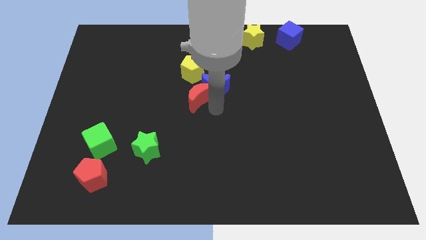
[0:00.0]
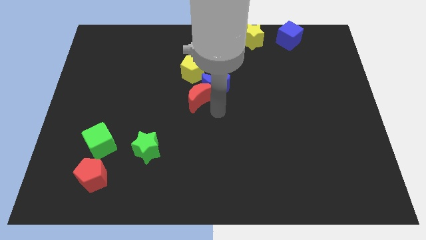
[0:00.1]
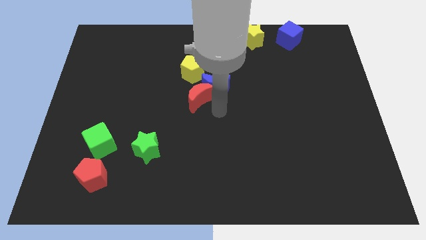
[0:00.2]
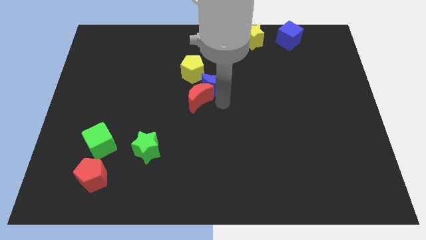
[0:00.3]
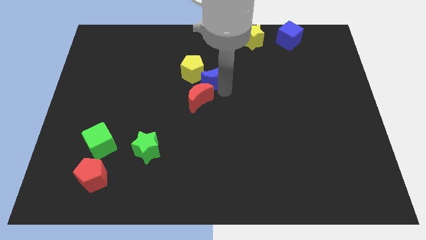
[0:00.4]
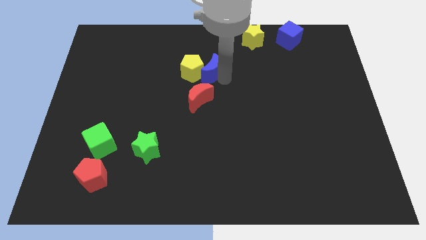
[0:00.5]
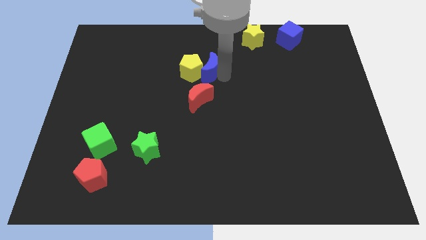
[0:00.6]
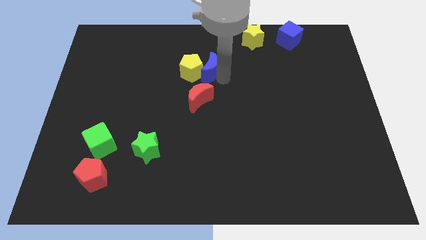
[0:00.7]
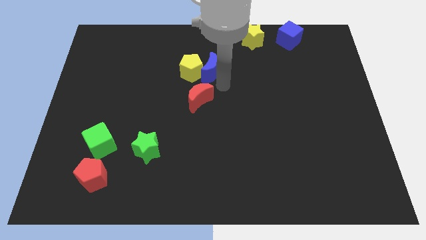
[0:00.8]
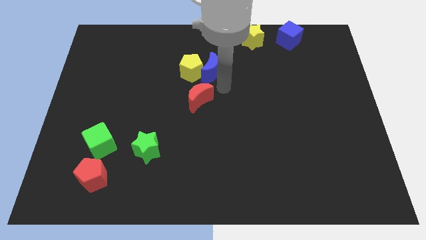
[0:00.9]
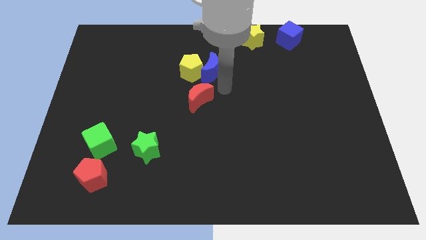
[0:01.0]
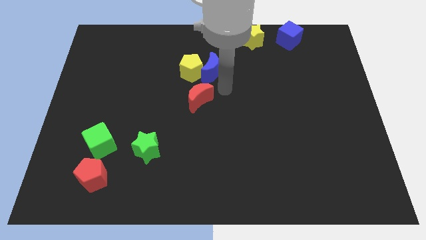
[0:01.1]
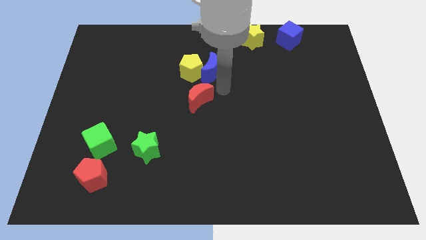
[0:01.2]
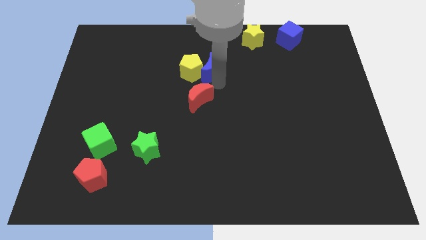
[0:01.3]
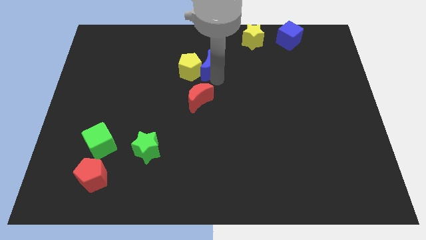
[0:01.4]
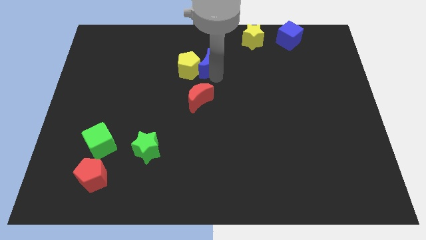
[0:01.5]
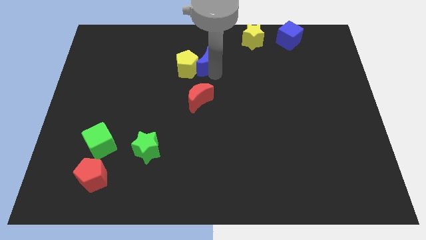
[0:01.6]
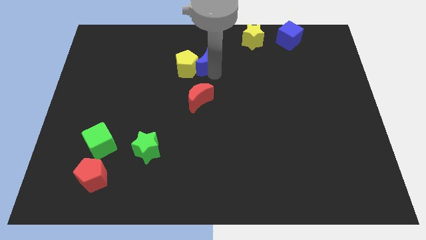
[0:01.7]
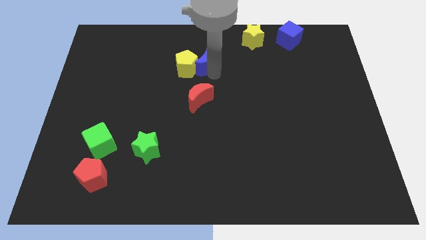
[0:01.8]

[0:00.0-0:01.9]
move the blue moon close to yellow pentagon

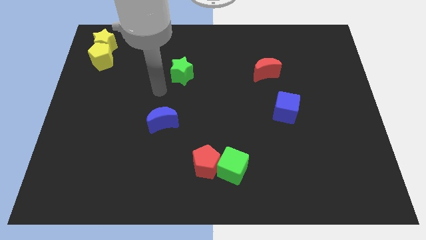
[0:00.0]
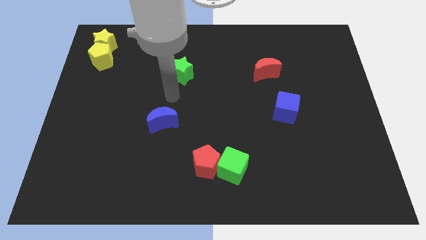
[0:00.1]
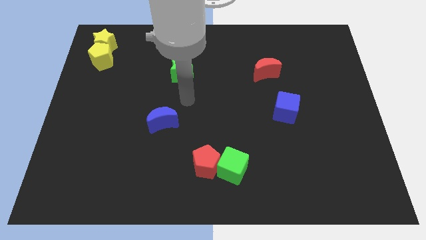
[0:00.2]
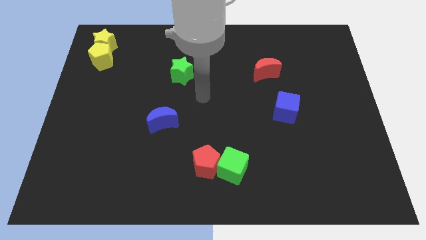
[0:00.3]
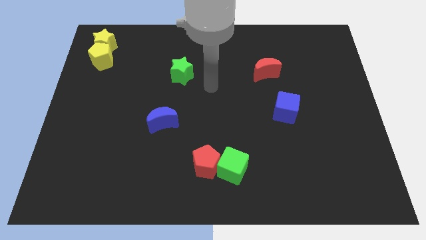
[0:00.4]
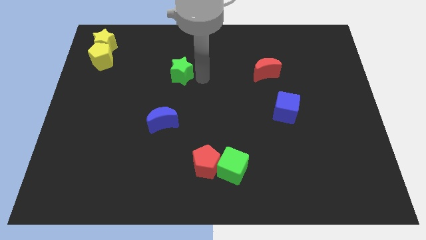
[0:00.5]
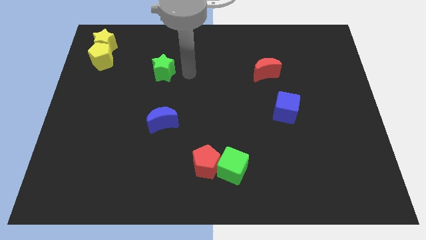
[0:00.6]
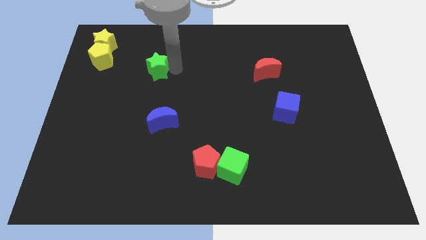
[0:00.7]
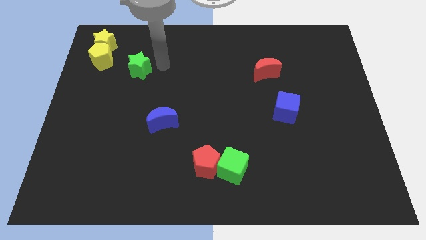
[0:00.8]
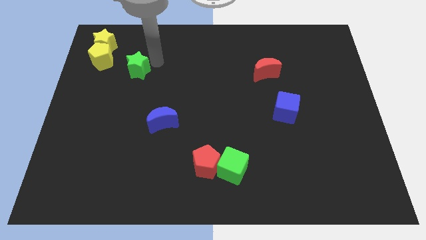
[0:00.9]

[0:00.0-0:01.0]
move the green star towards yellow blocks

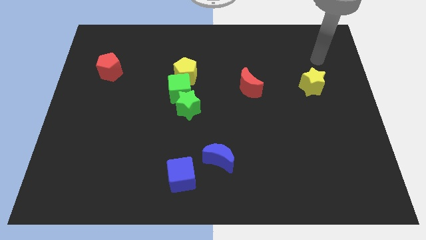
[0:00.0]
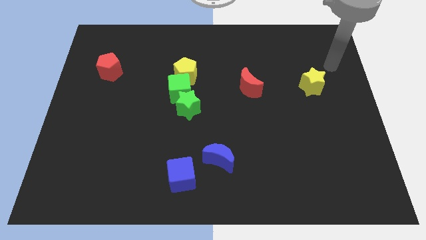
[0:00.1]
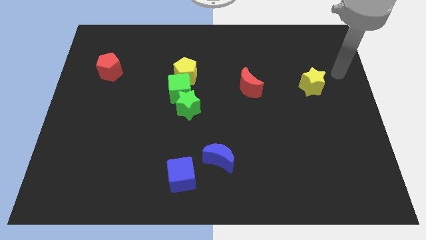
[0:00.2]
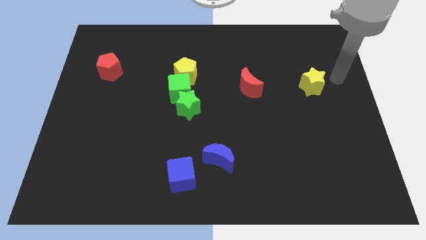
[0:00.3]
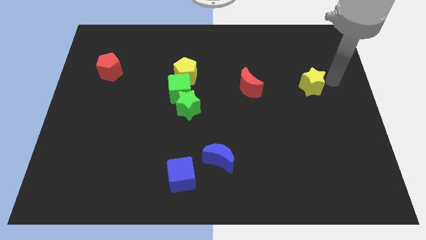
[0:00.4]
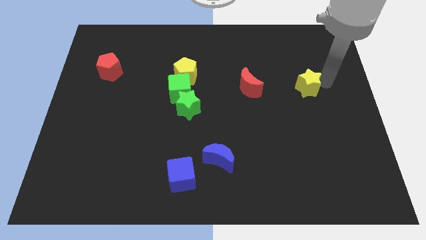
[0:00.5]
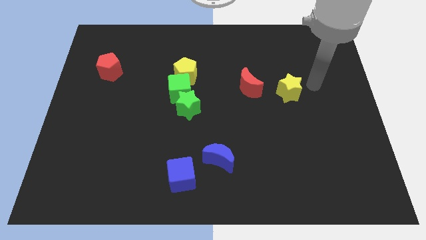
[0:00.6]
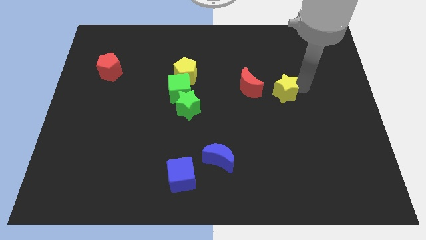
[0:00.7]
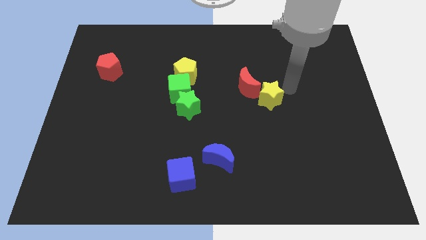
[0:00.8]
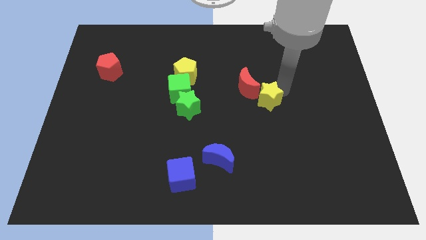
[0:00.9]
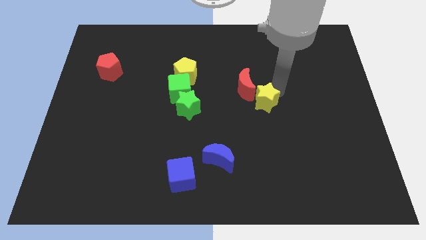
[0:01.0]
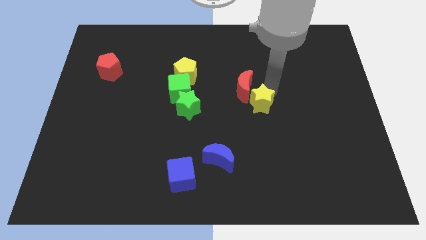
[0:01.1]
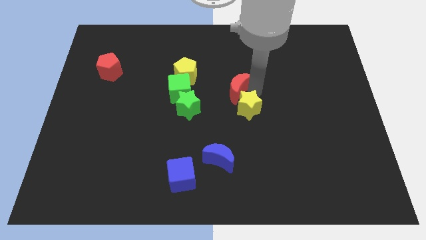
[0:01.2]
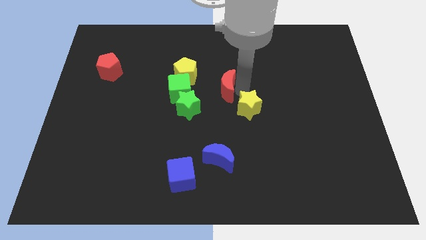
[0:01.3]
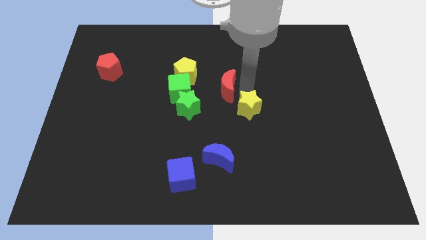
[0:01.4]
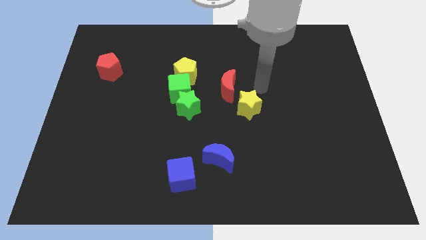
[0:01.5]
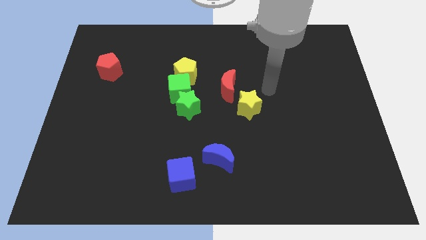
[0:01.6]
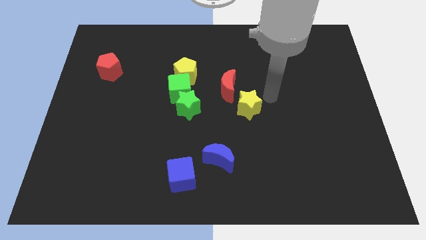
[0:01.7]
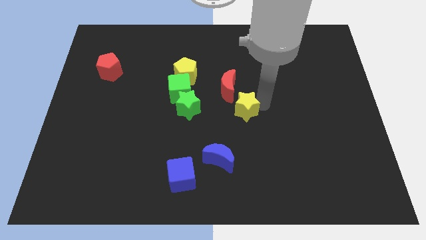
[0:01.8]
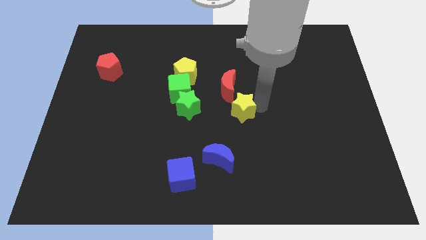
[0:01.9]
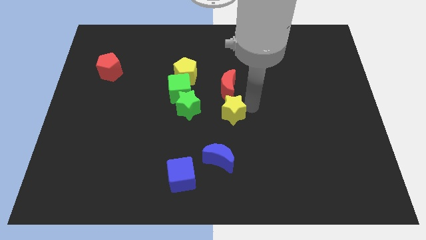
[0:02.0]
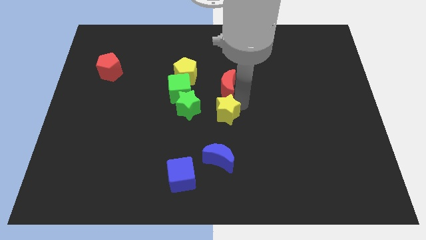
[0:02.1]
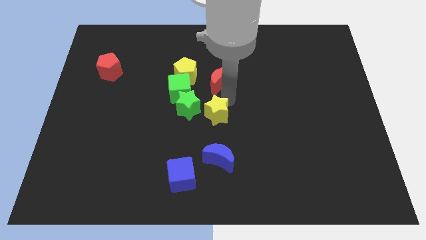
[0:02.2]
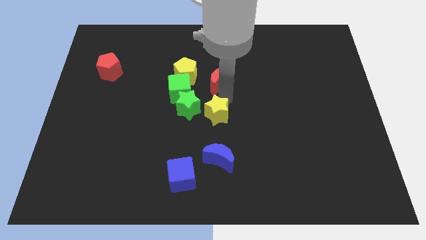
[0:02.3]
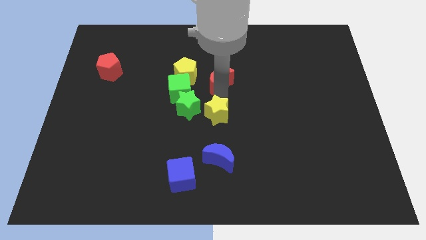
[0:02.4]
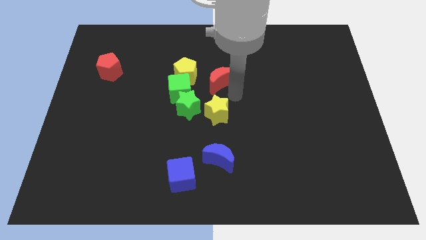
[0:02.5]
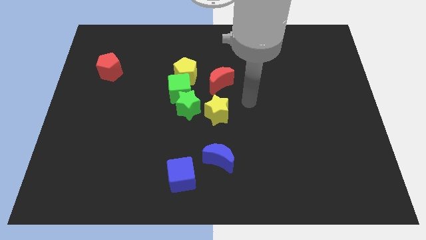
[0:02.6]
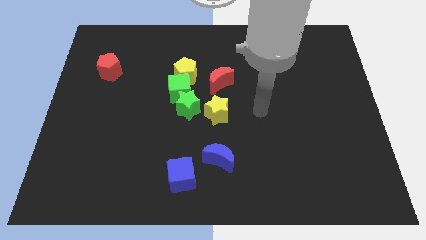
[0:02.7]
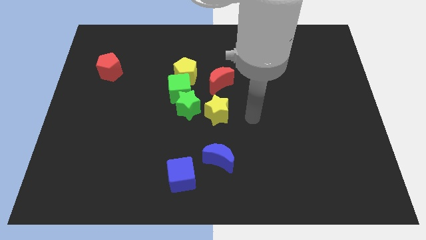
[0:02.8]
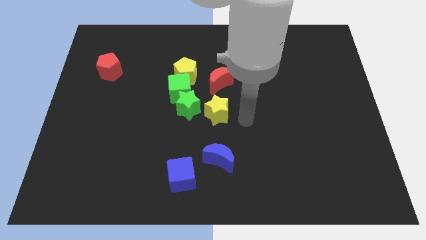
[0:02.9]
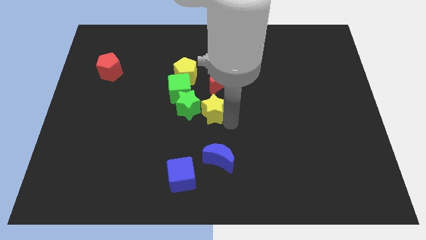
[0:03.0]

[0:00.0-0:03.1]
slide yellow star to the center

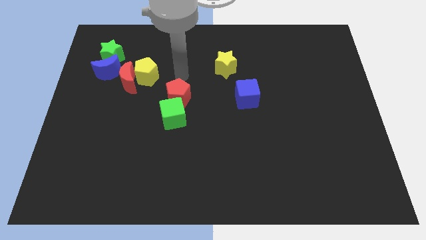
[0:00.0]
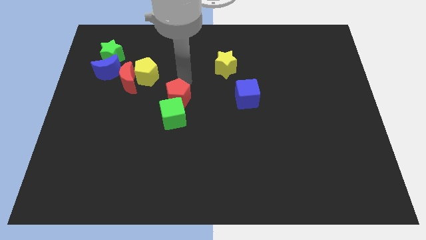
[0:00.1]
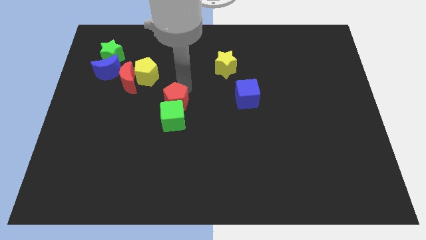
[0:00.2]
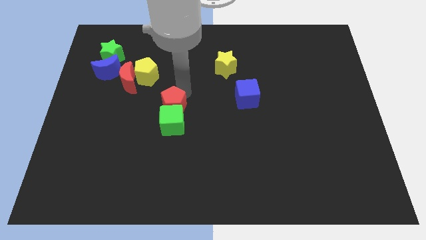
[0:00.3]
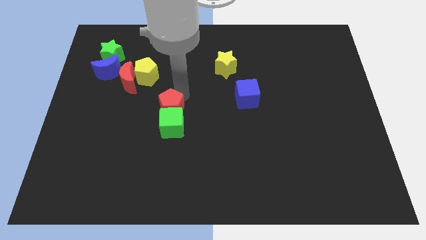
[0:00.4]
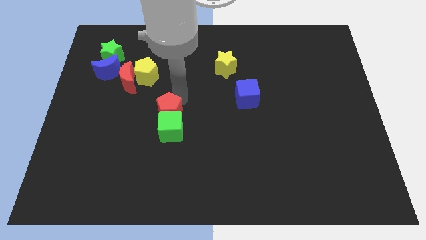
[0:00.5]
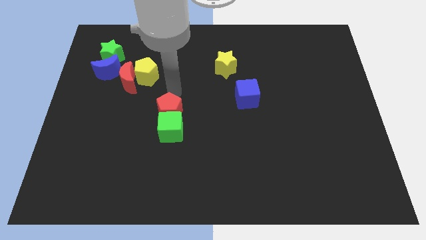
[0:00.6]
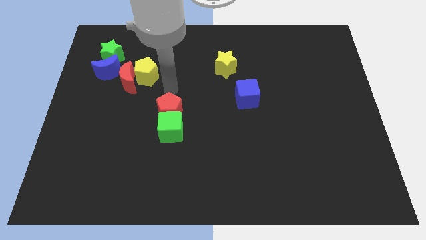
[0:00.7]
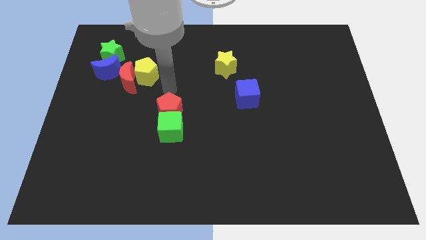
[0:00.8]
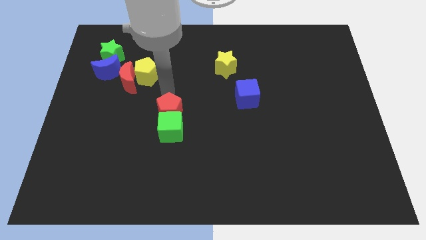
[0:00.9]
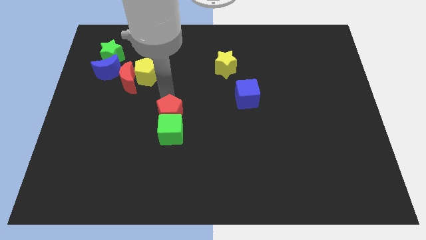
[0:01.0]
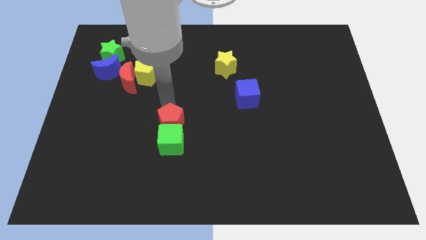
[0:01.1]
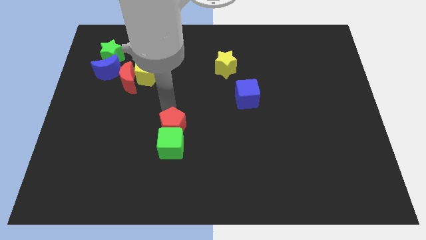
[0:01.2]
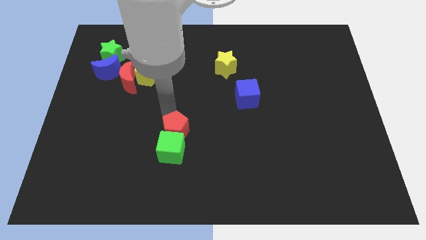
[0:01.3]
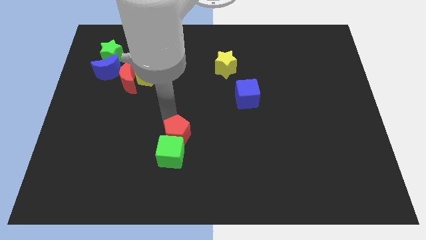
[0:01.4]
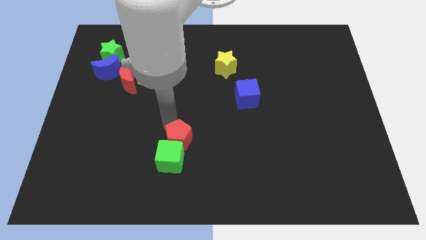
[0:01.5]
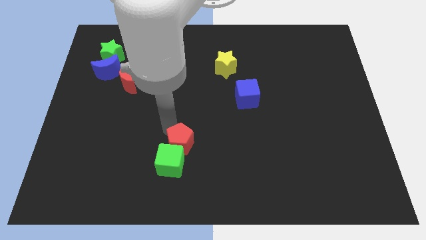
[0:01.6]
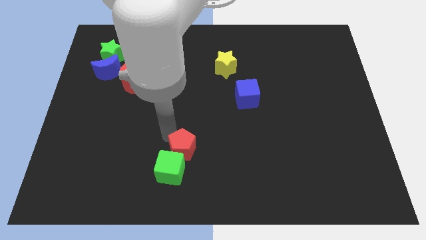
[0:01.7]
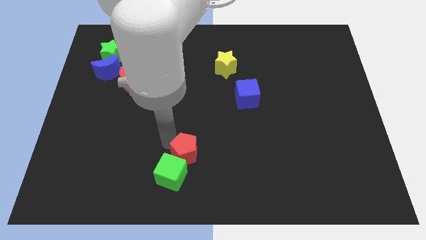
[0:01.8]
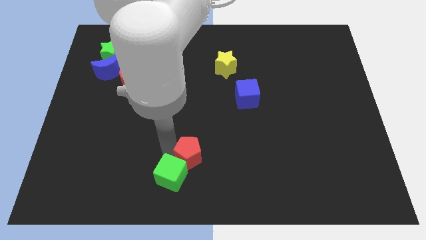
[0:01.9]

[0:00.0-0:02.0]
push the green cube with the red pentagon towards the bottom center of the board

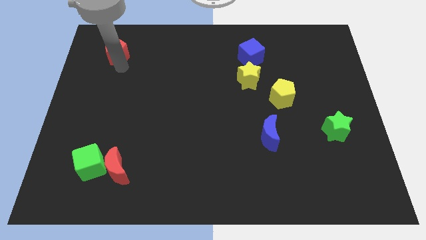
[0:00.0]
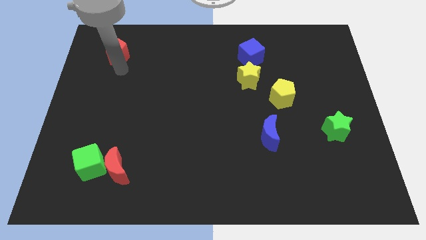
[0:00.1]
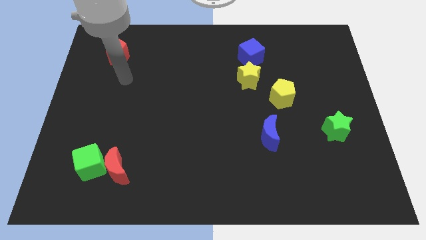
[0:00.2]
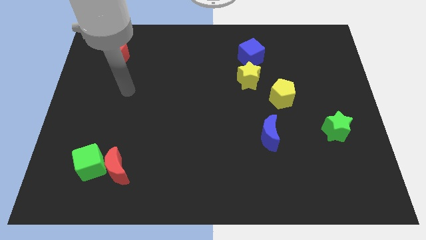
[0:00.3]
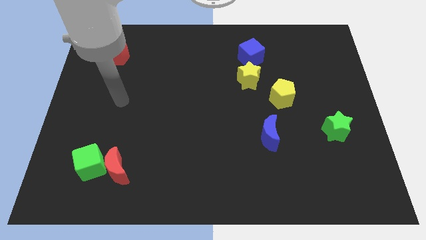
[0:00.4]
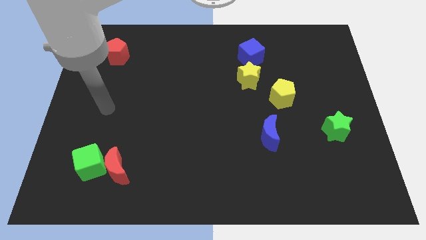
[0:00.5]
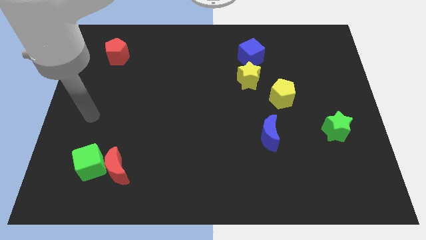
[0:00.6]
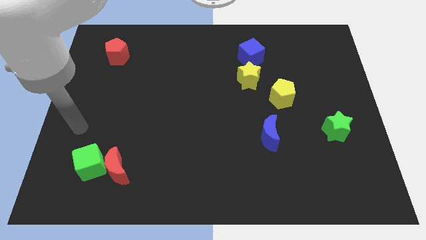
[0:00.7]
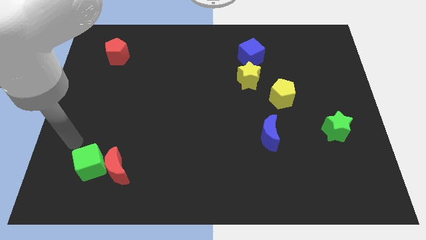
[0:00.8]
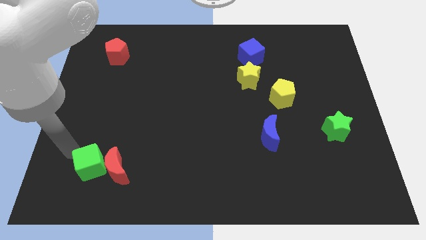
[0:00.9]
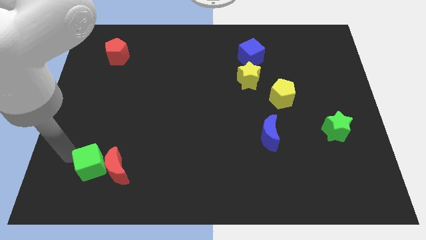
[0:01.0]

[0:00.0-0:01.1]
move the arm away from the red pentagon
